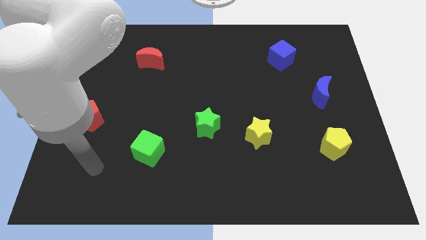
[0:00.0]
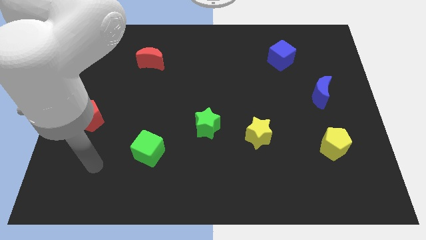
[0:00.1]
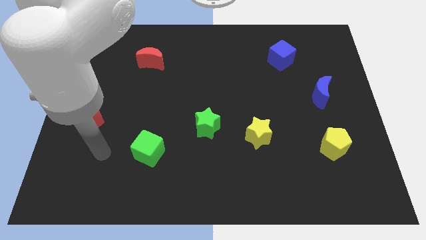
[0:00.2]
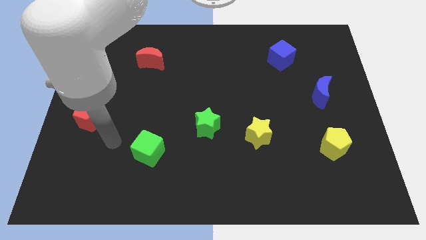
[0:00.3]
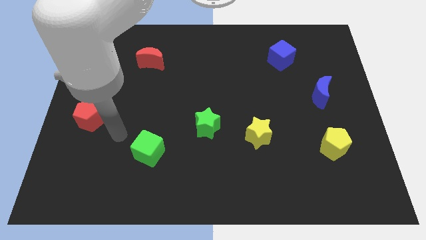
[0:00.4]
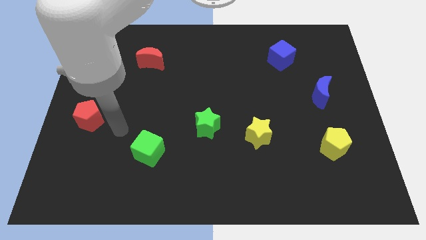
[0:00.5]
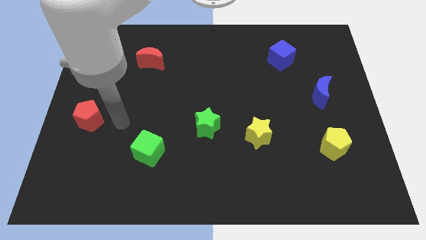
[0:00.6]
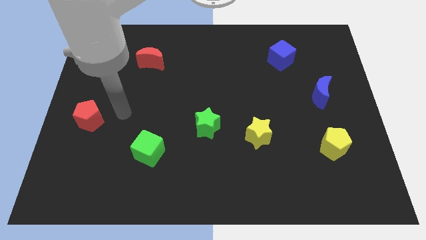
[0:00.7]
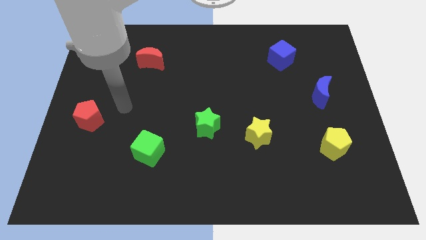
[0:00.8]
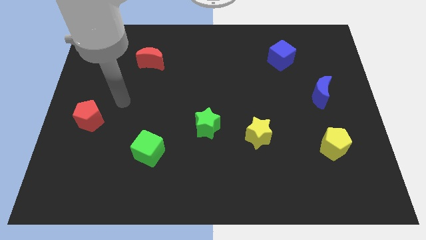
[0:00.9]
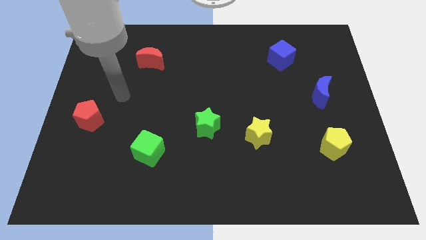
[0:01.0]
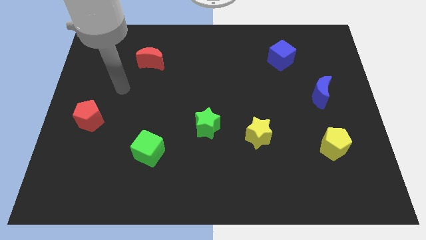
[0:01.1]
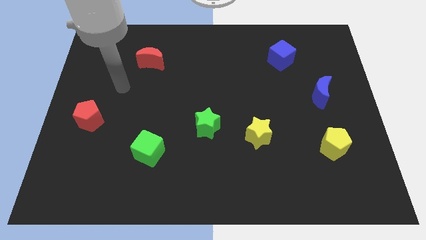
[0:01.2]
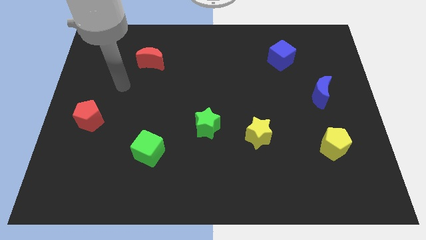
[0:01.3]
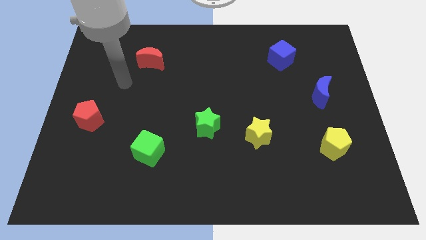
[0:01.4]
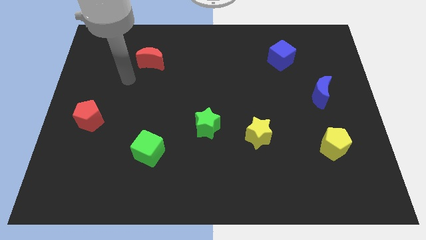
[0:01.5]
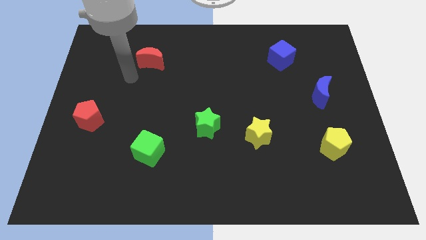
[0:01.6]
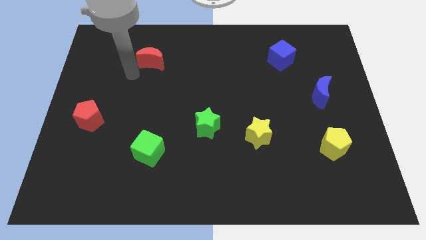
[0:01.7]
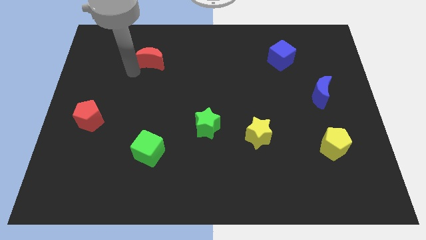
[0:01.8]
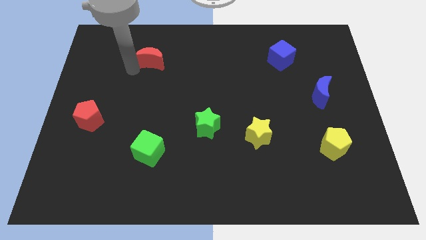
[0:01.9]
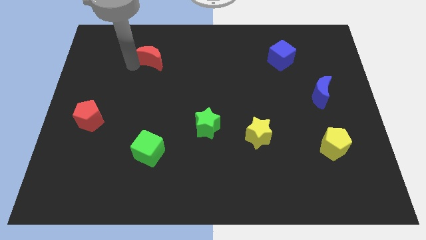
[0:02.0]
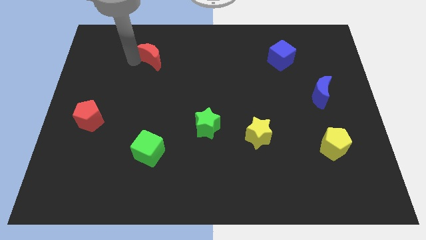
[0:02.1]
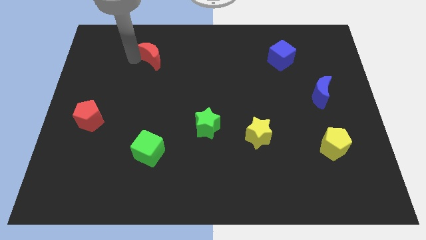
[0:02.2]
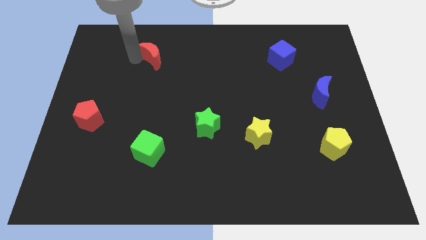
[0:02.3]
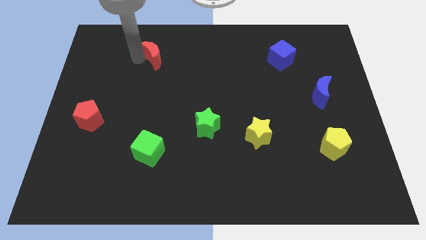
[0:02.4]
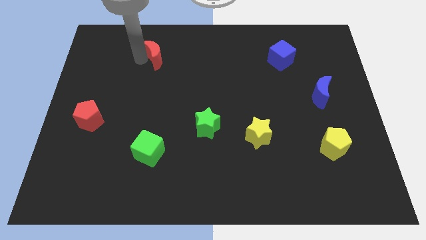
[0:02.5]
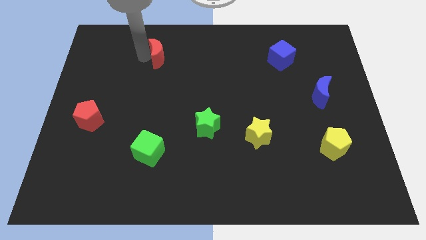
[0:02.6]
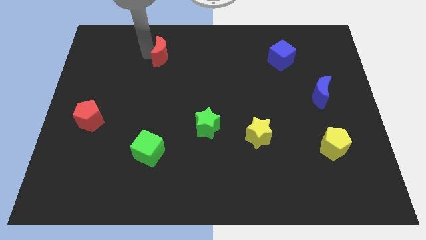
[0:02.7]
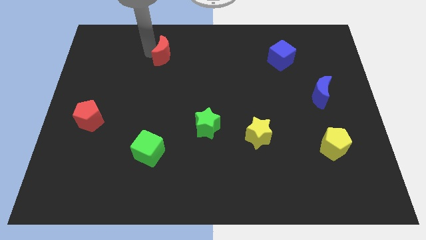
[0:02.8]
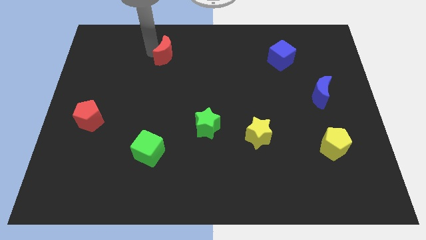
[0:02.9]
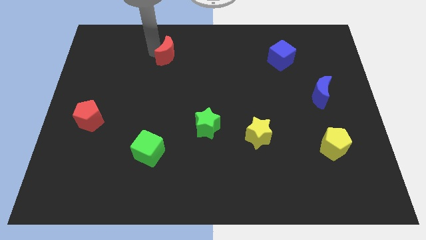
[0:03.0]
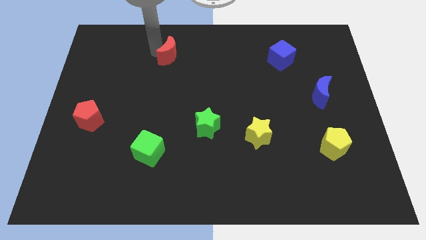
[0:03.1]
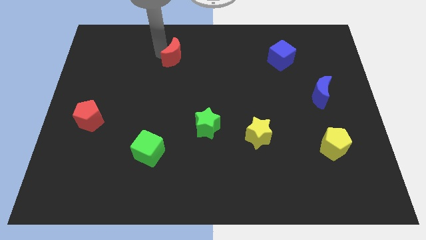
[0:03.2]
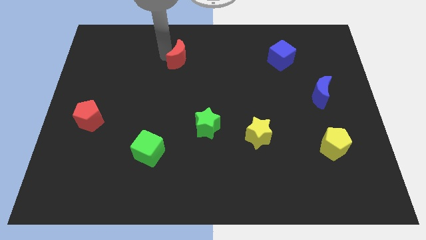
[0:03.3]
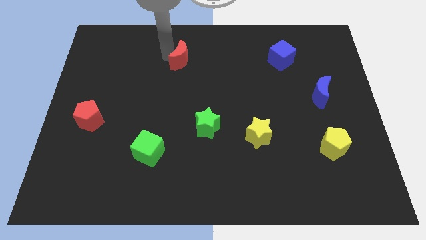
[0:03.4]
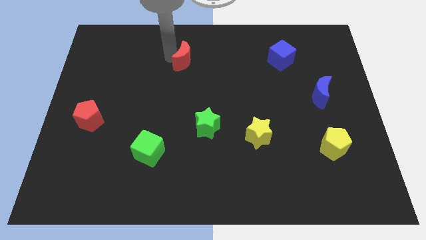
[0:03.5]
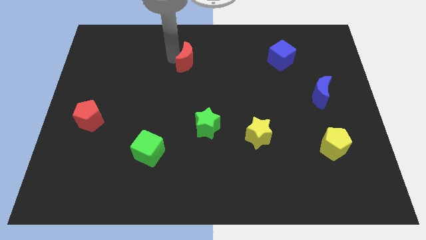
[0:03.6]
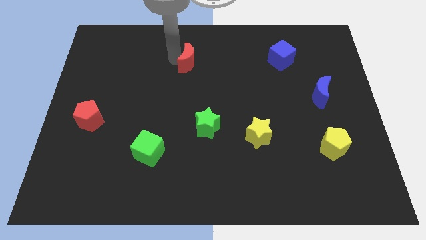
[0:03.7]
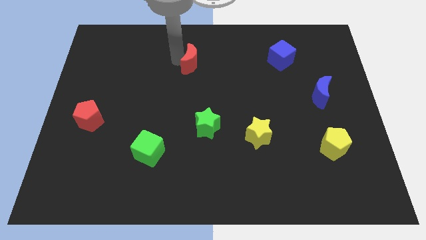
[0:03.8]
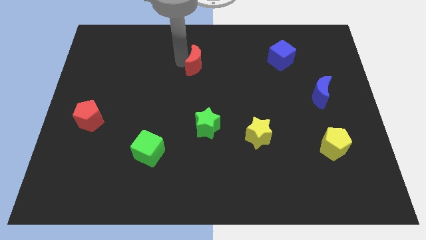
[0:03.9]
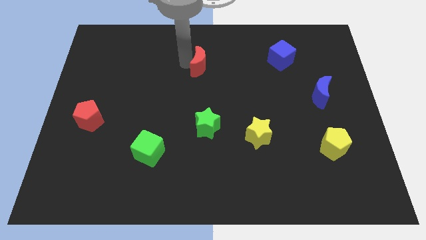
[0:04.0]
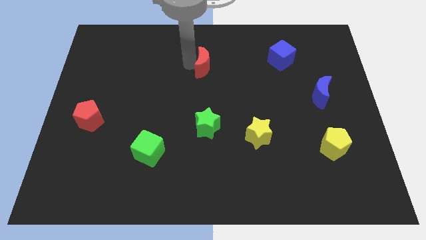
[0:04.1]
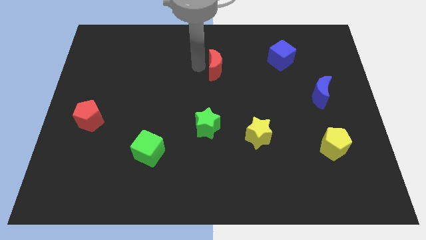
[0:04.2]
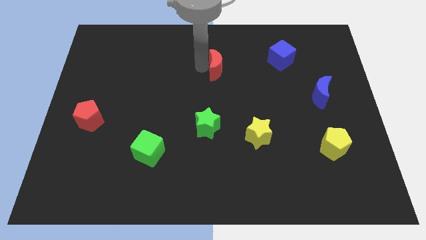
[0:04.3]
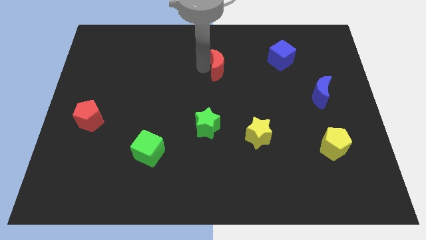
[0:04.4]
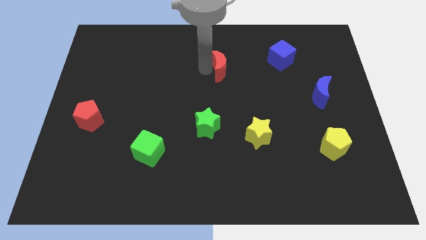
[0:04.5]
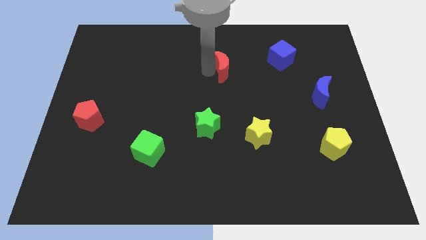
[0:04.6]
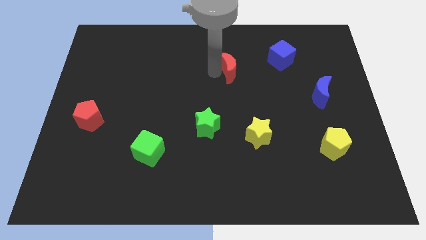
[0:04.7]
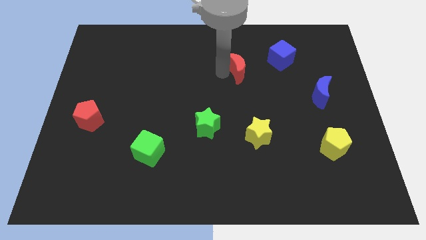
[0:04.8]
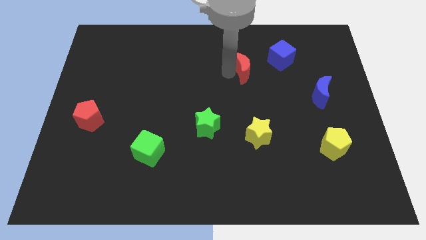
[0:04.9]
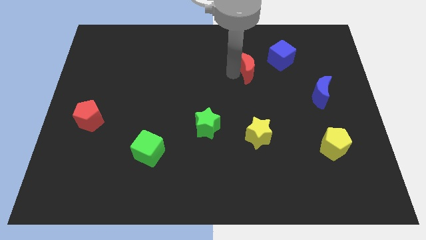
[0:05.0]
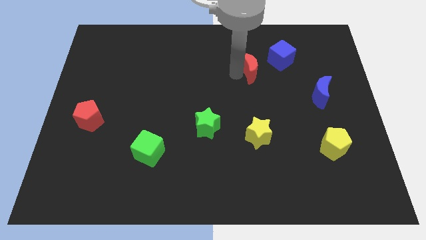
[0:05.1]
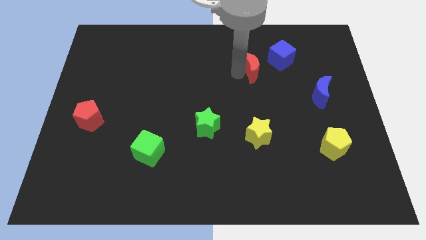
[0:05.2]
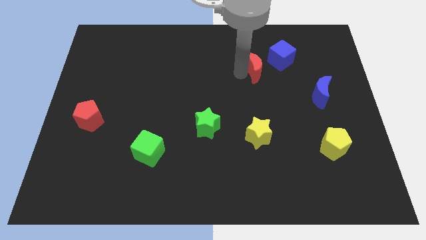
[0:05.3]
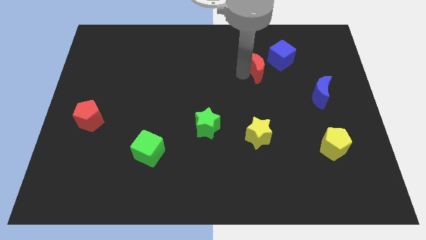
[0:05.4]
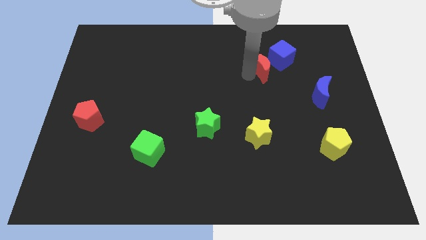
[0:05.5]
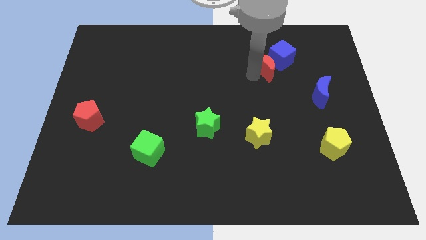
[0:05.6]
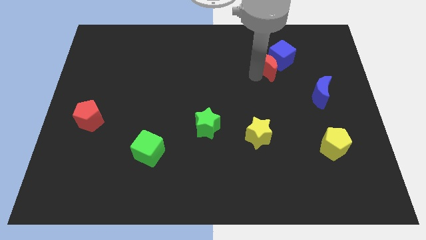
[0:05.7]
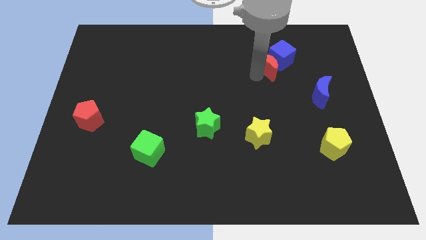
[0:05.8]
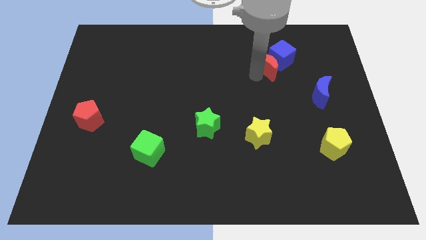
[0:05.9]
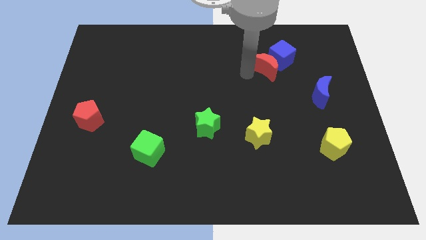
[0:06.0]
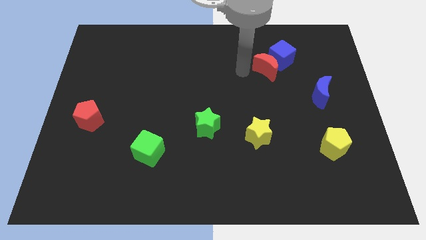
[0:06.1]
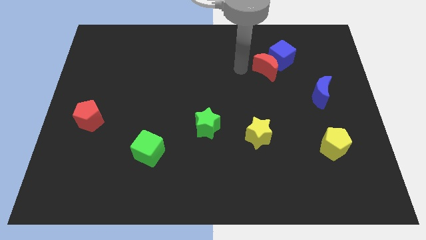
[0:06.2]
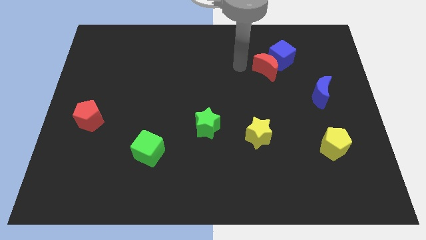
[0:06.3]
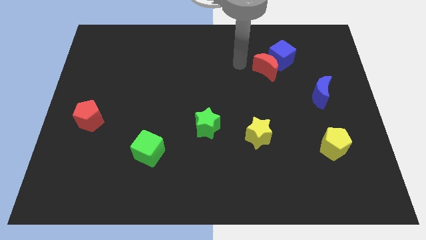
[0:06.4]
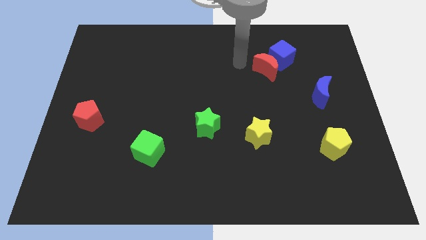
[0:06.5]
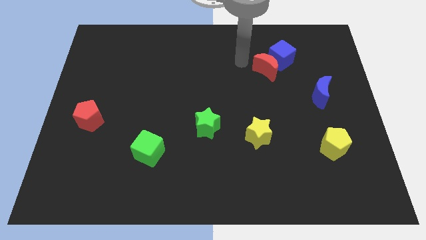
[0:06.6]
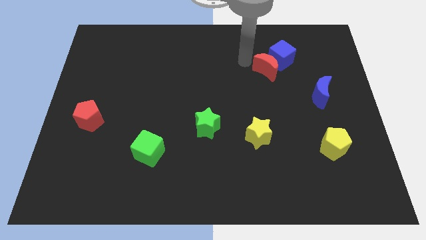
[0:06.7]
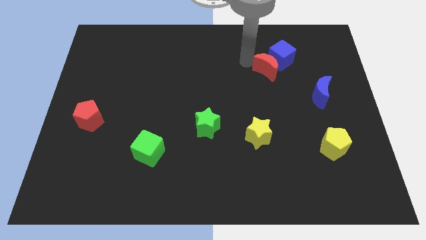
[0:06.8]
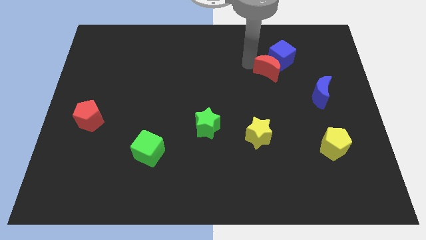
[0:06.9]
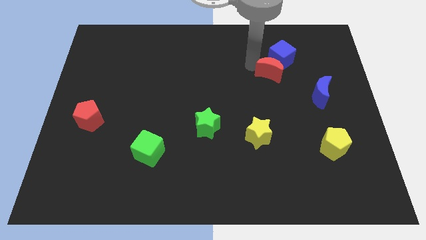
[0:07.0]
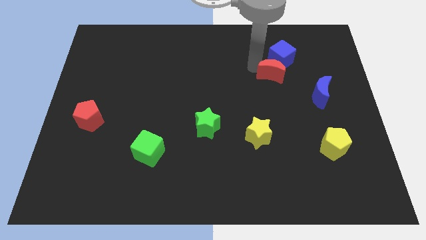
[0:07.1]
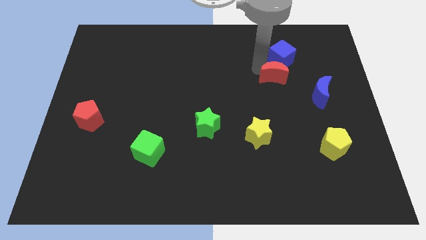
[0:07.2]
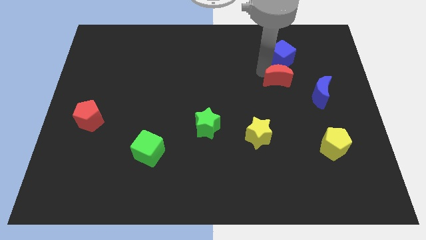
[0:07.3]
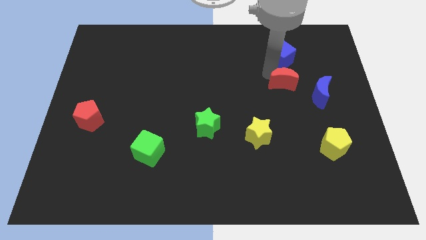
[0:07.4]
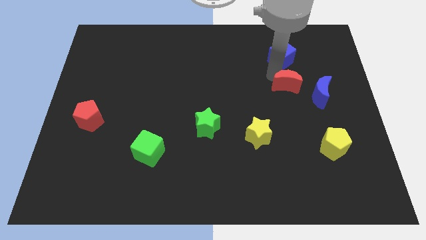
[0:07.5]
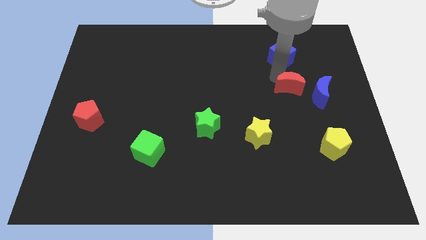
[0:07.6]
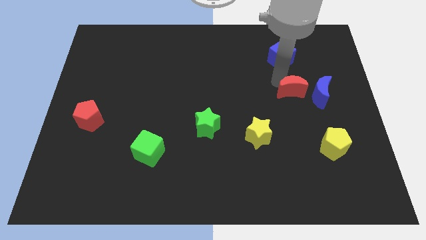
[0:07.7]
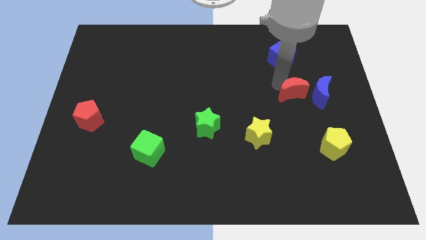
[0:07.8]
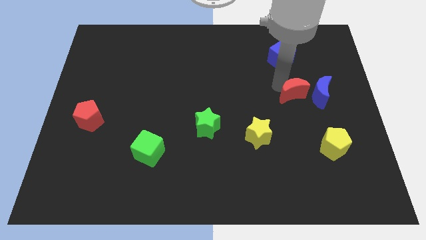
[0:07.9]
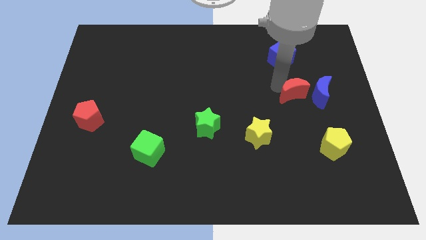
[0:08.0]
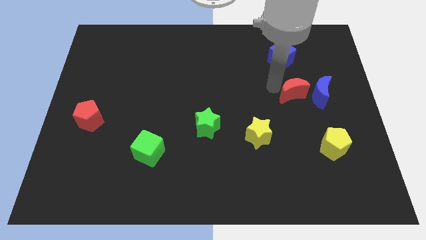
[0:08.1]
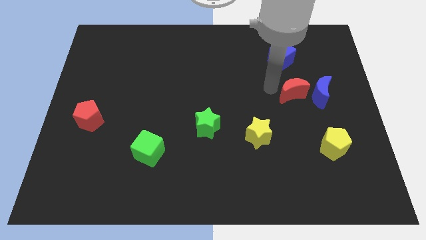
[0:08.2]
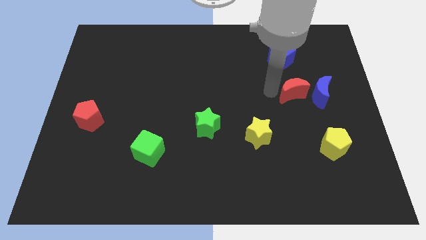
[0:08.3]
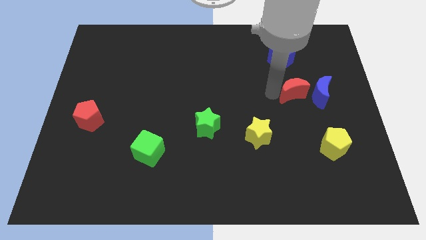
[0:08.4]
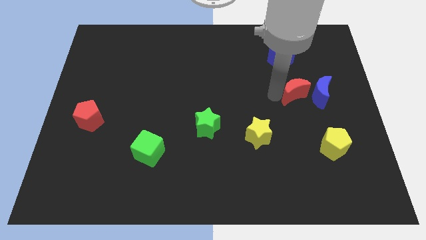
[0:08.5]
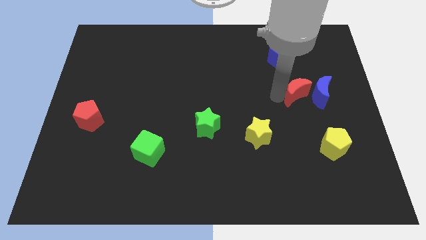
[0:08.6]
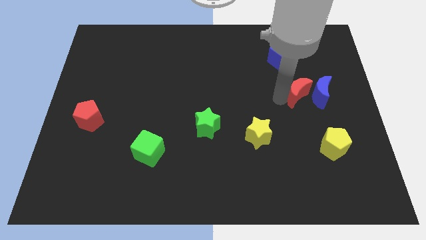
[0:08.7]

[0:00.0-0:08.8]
put the red moon towards the blue moon
